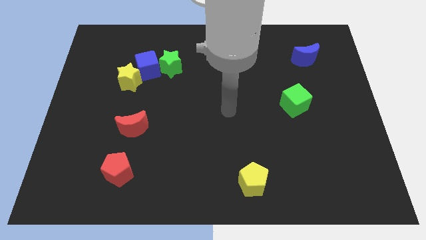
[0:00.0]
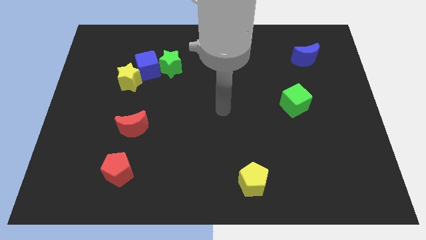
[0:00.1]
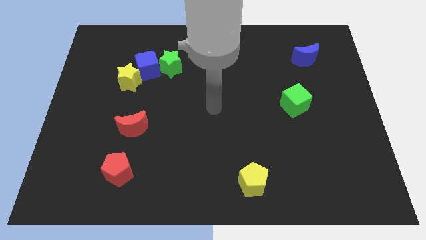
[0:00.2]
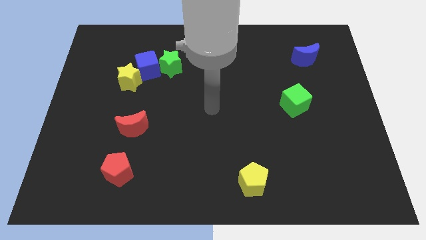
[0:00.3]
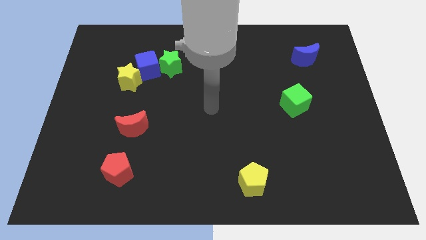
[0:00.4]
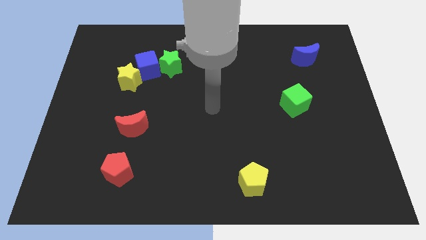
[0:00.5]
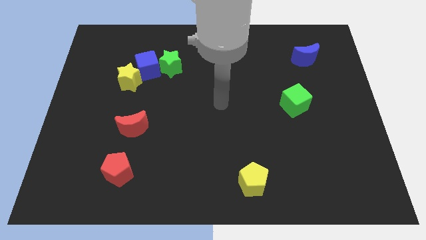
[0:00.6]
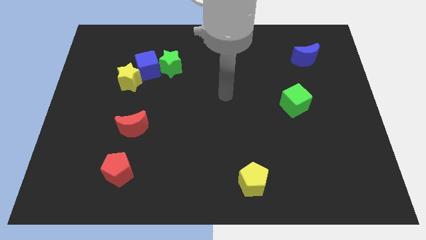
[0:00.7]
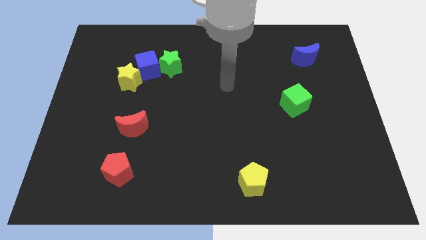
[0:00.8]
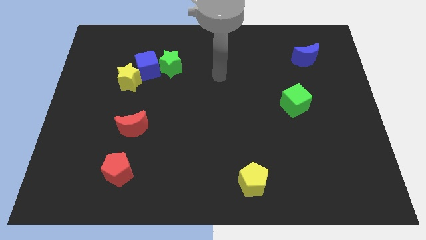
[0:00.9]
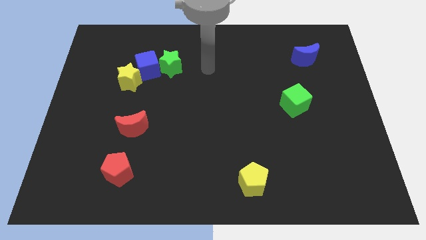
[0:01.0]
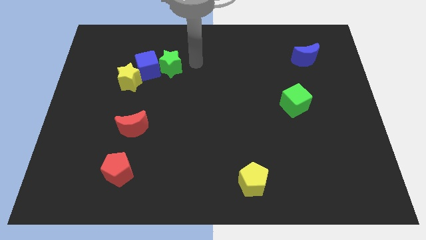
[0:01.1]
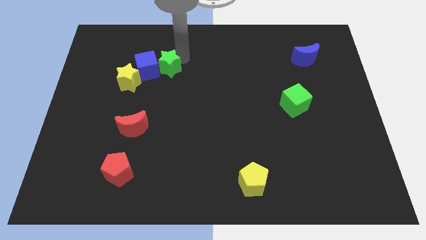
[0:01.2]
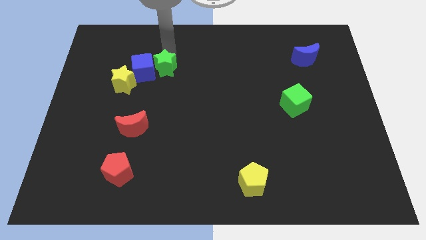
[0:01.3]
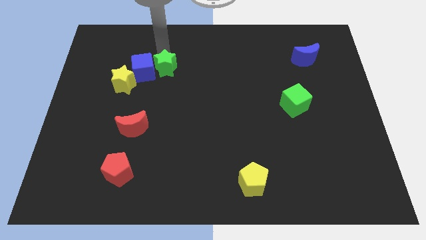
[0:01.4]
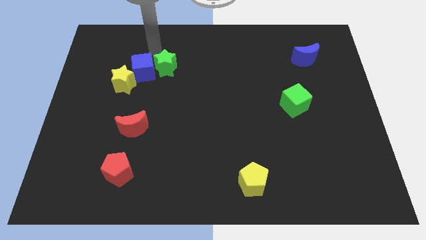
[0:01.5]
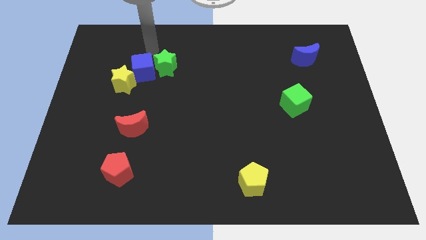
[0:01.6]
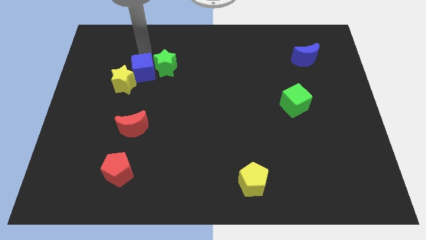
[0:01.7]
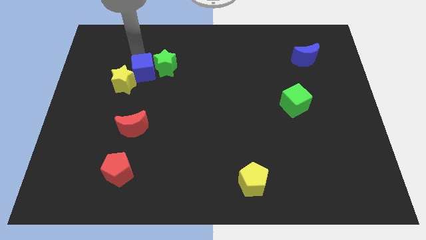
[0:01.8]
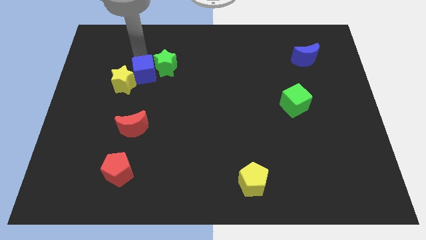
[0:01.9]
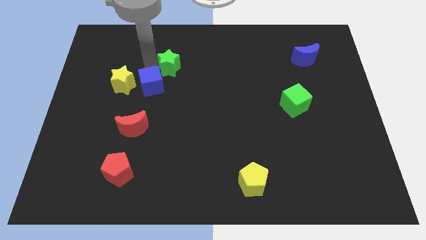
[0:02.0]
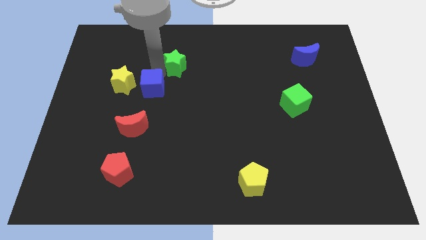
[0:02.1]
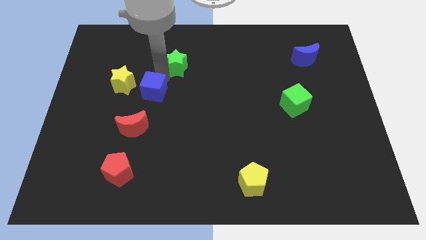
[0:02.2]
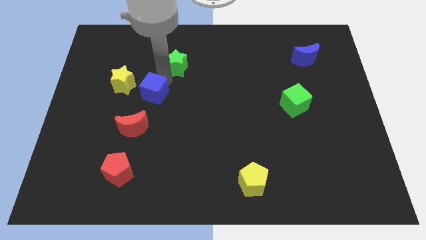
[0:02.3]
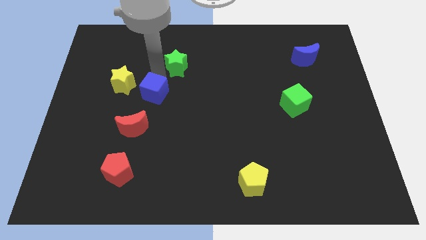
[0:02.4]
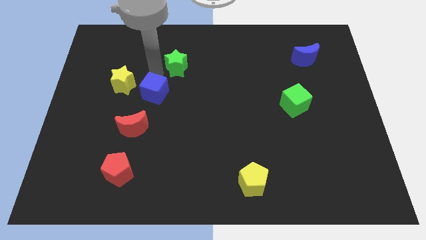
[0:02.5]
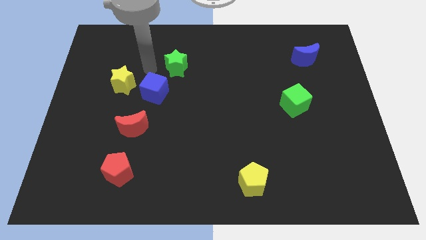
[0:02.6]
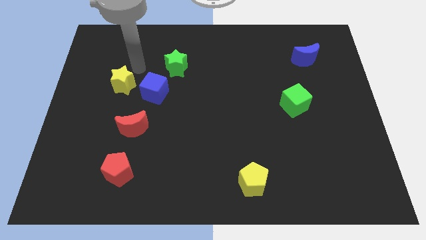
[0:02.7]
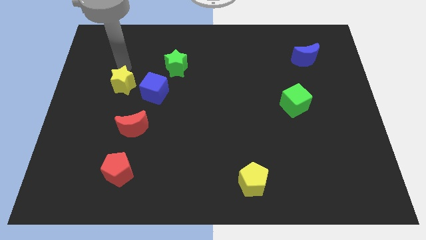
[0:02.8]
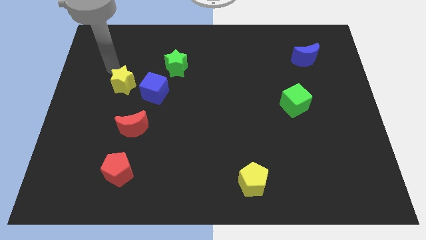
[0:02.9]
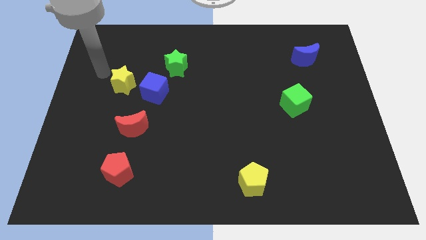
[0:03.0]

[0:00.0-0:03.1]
separate the blue cube from yellow star and green star towards down

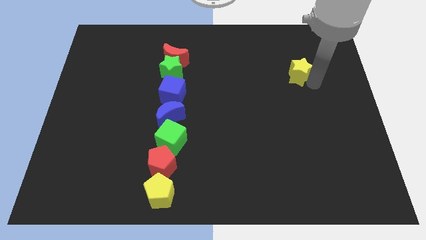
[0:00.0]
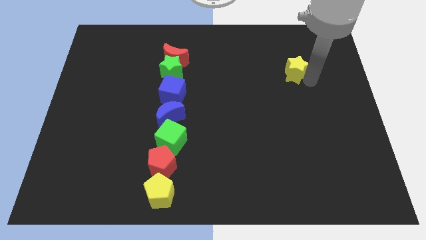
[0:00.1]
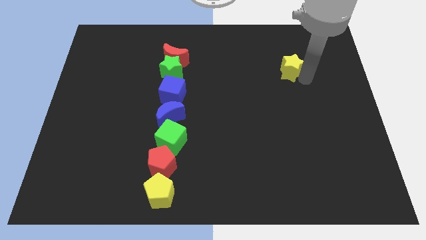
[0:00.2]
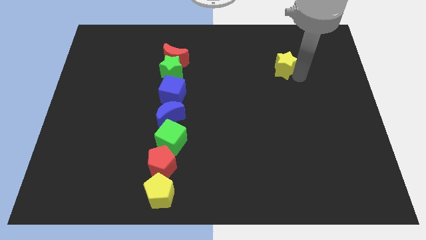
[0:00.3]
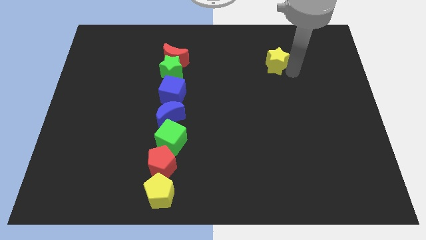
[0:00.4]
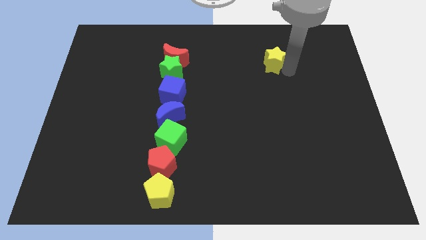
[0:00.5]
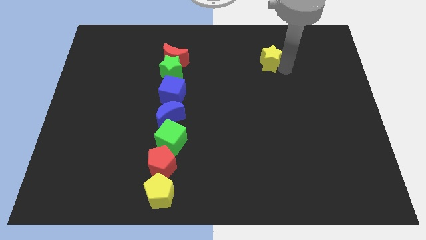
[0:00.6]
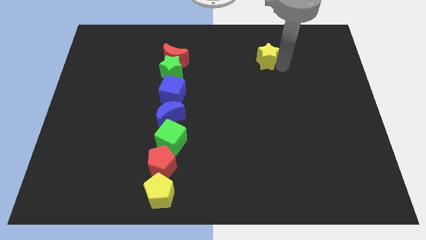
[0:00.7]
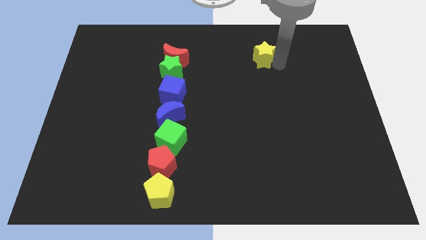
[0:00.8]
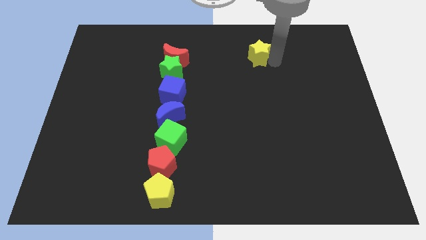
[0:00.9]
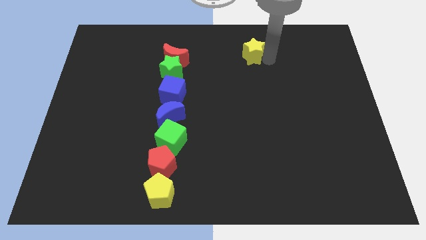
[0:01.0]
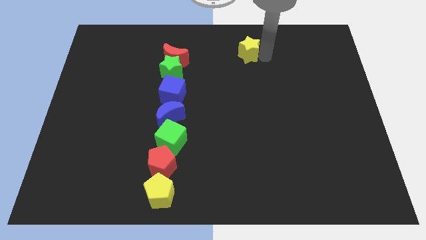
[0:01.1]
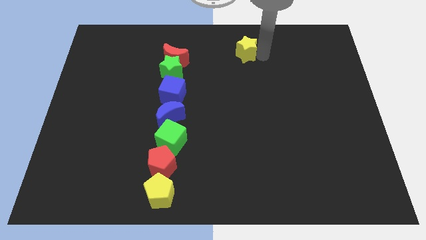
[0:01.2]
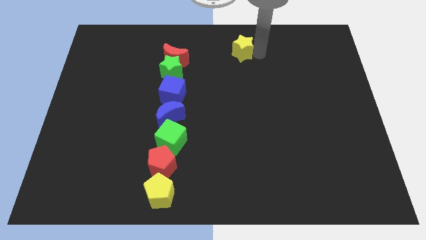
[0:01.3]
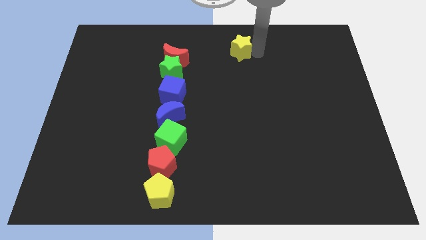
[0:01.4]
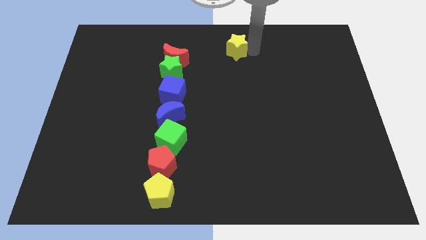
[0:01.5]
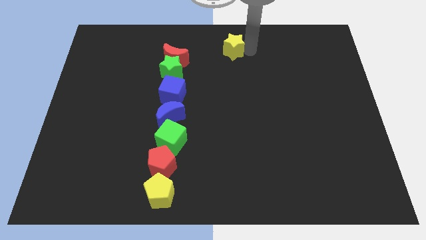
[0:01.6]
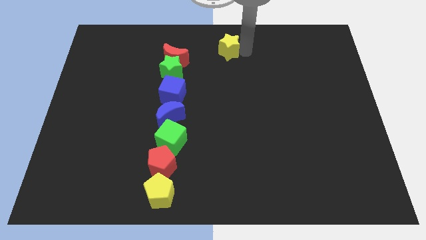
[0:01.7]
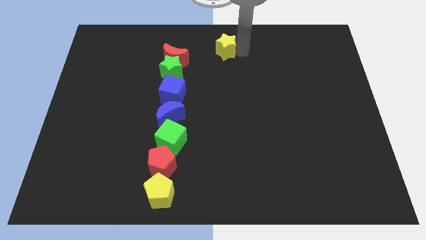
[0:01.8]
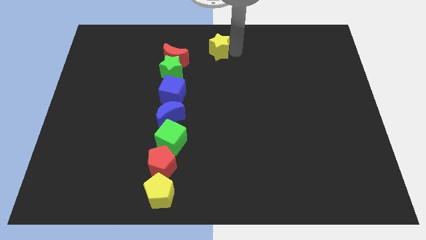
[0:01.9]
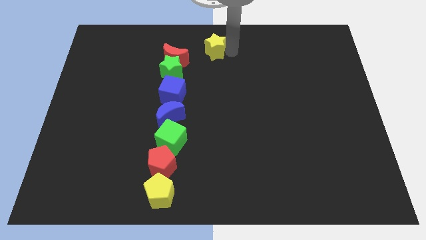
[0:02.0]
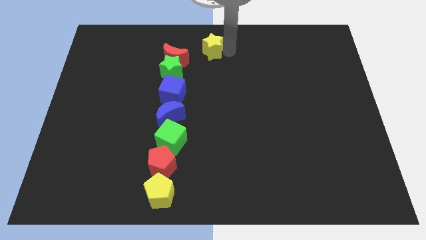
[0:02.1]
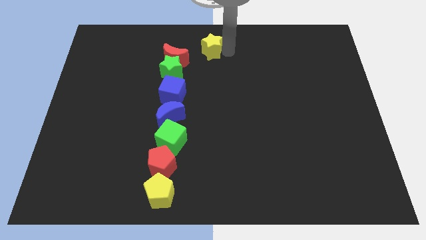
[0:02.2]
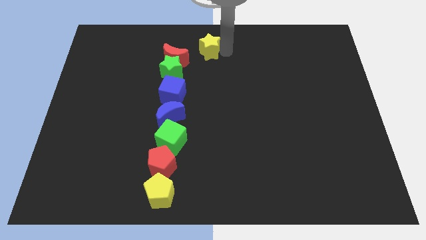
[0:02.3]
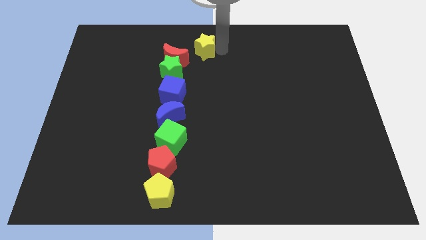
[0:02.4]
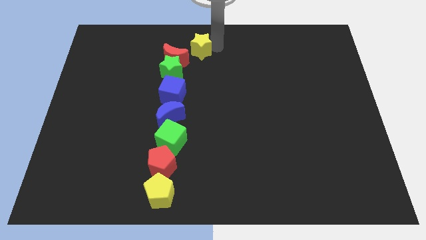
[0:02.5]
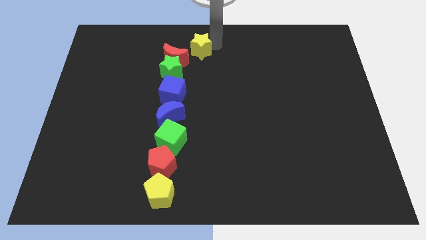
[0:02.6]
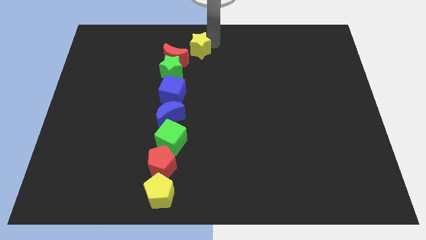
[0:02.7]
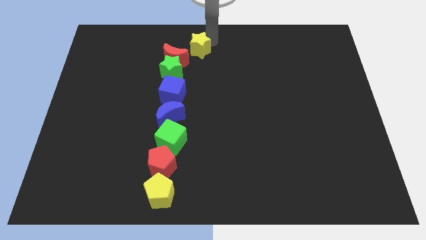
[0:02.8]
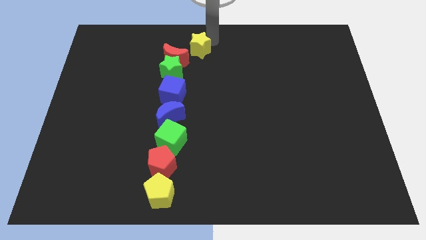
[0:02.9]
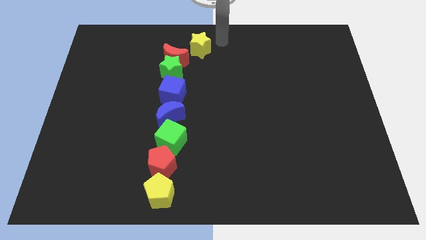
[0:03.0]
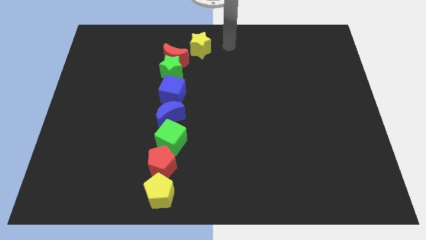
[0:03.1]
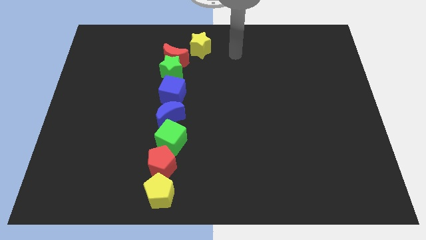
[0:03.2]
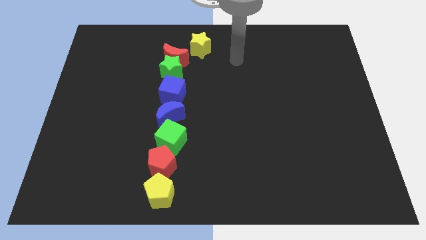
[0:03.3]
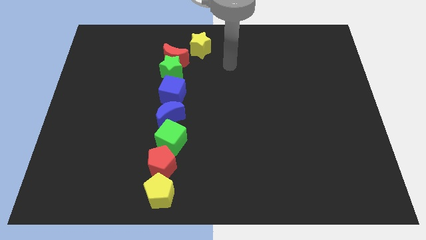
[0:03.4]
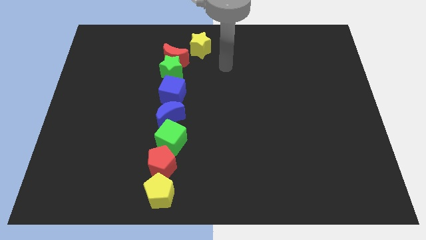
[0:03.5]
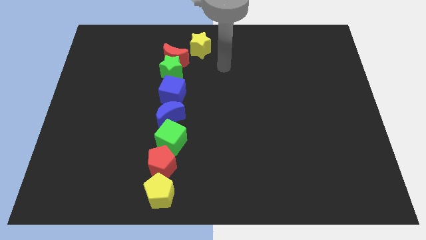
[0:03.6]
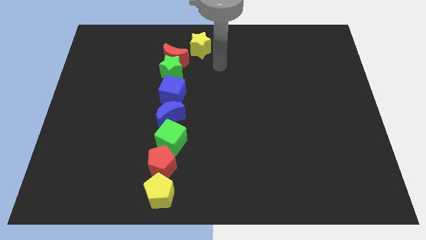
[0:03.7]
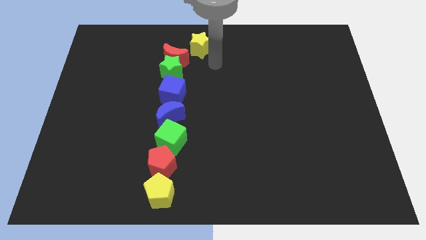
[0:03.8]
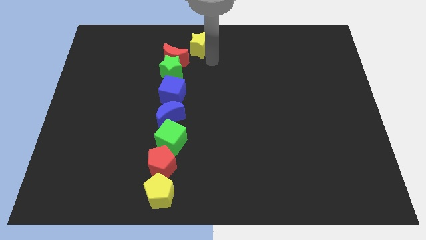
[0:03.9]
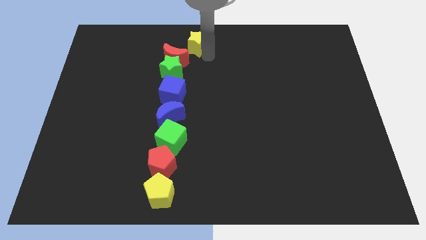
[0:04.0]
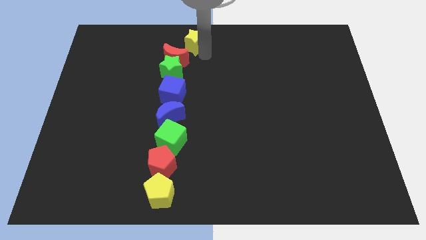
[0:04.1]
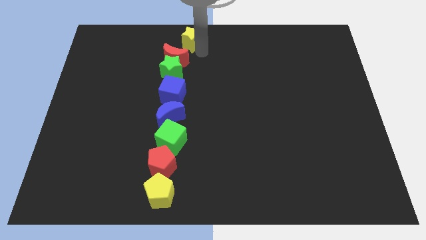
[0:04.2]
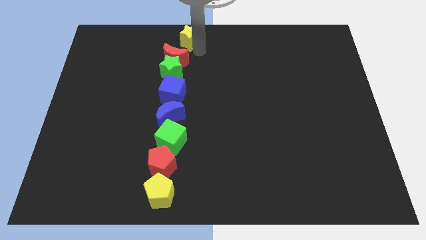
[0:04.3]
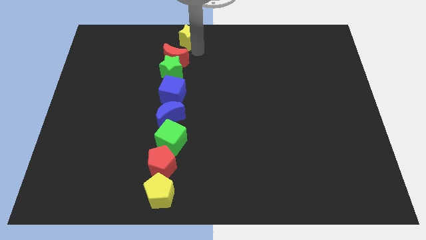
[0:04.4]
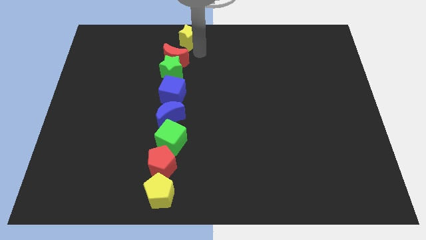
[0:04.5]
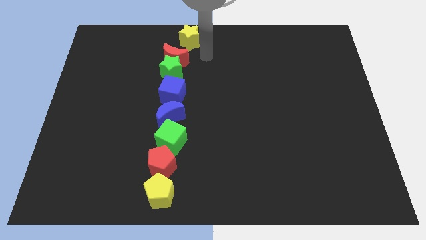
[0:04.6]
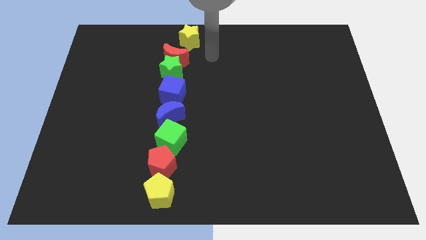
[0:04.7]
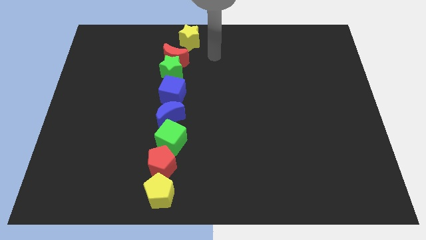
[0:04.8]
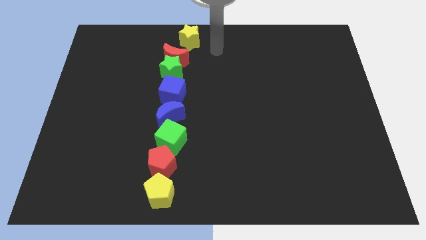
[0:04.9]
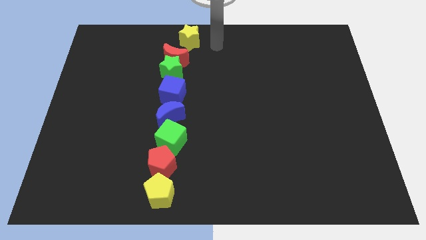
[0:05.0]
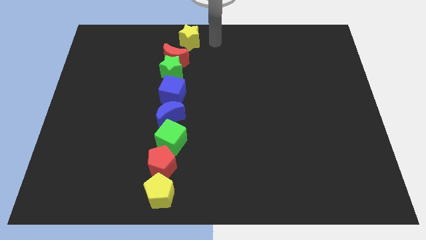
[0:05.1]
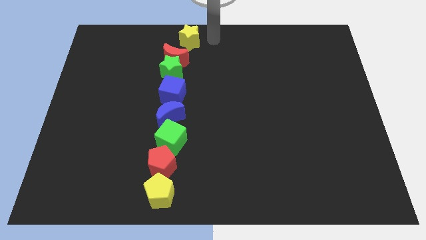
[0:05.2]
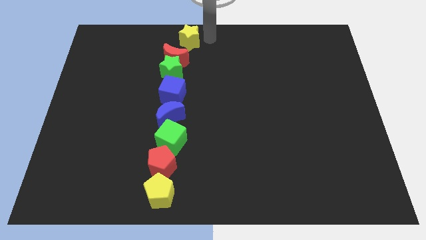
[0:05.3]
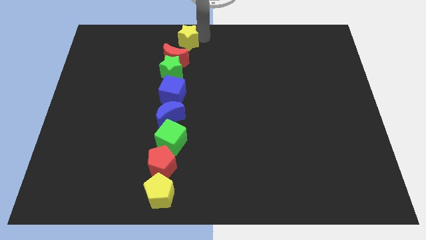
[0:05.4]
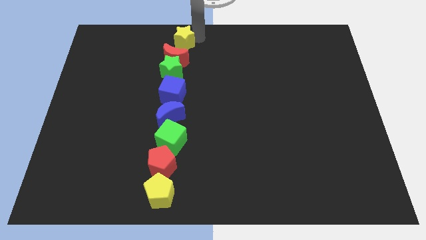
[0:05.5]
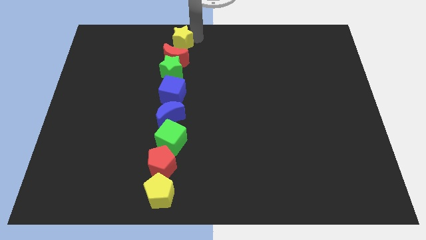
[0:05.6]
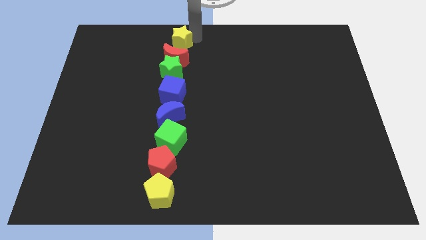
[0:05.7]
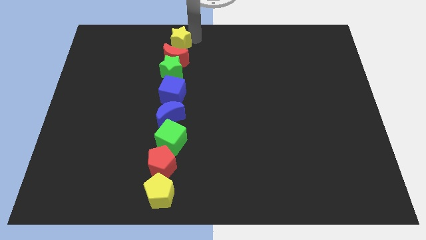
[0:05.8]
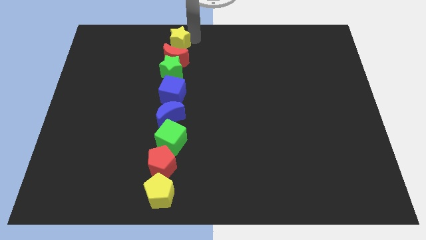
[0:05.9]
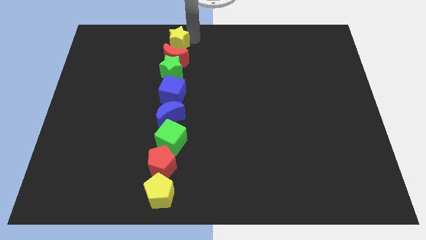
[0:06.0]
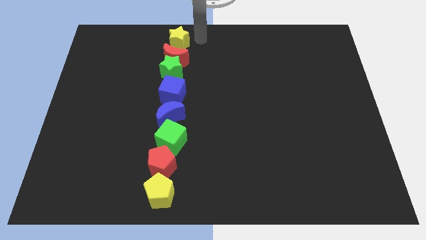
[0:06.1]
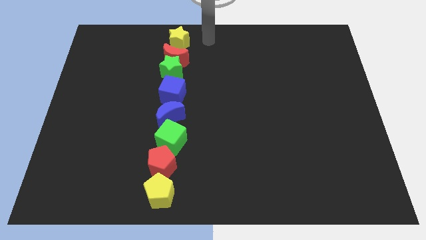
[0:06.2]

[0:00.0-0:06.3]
place the yellow star above the red crescent
